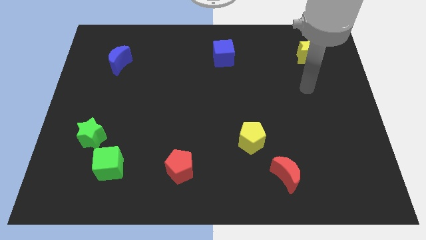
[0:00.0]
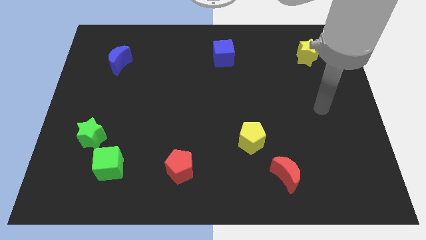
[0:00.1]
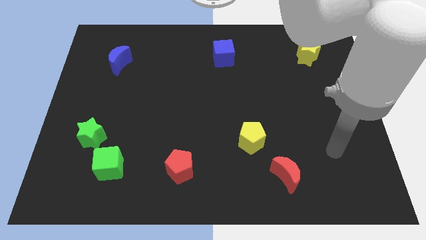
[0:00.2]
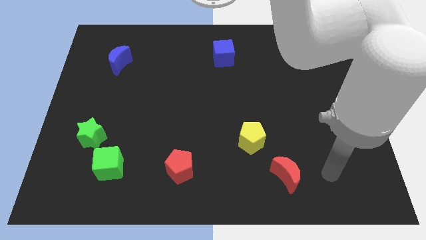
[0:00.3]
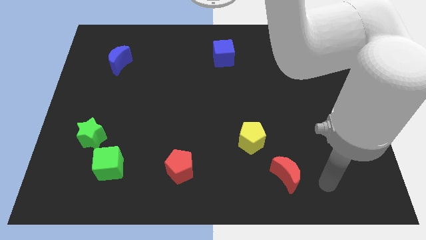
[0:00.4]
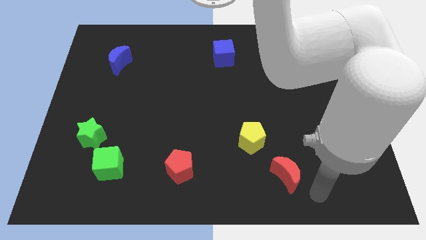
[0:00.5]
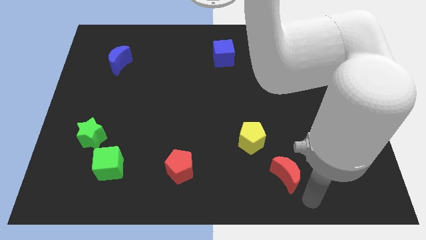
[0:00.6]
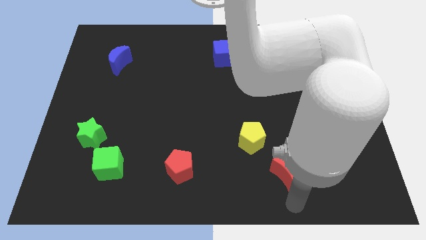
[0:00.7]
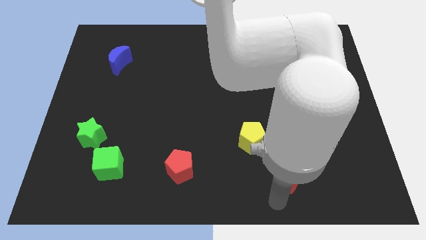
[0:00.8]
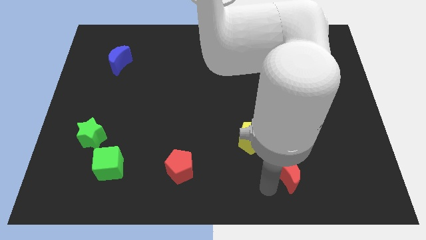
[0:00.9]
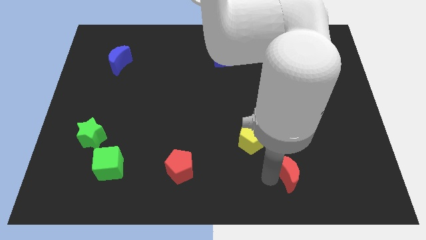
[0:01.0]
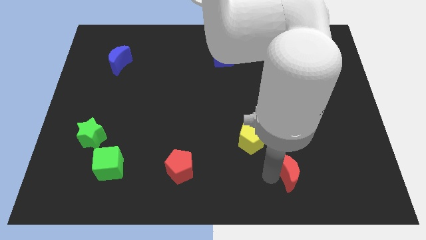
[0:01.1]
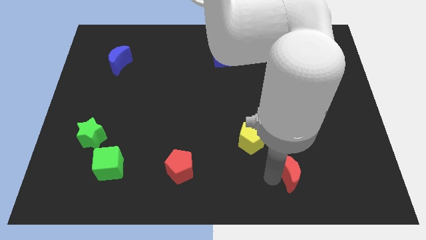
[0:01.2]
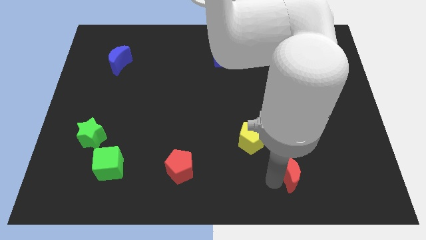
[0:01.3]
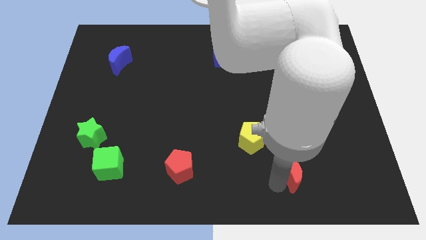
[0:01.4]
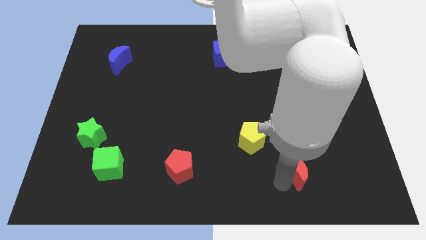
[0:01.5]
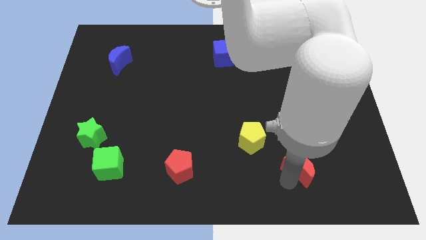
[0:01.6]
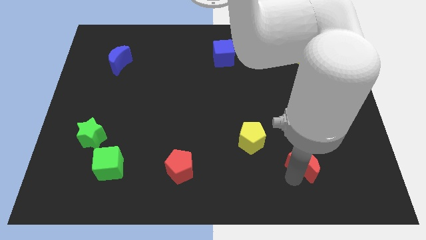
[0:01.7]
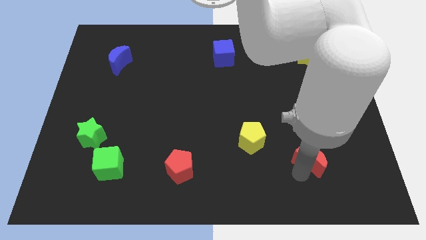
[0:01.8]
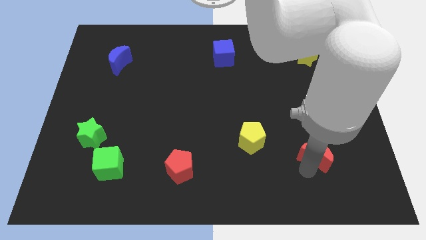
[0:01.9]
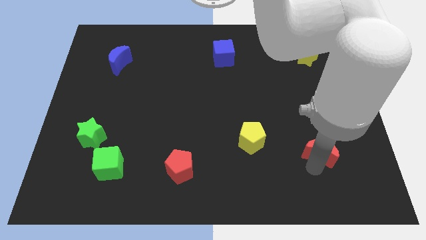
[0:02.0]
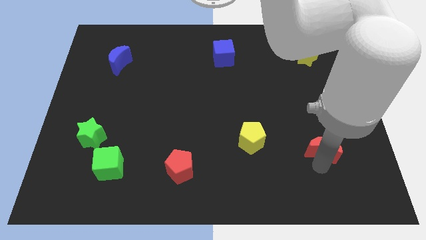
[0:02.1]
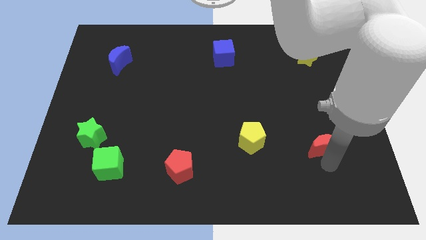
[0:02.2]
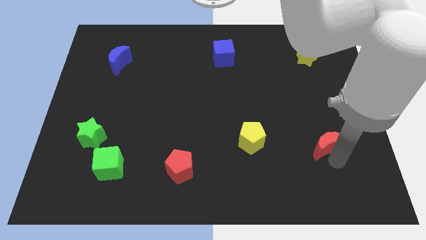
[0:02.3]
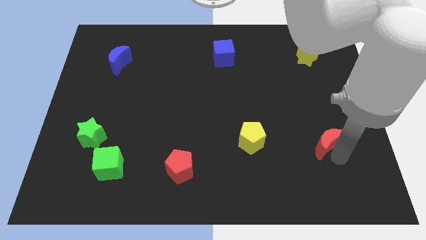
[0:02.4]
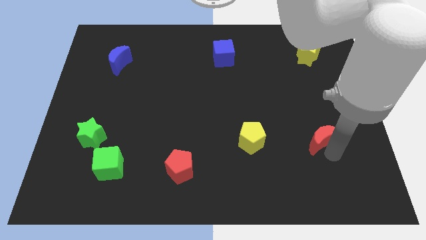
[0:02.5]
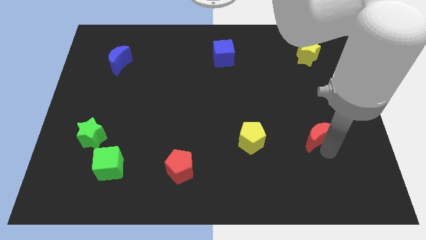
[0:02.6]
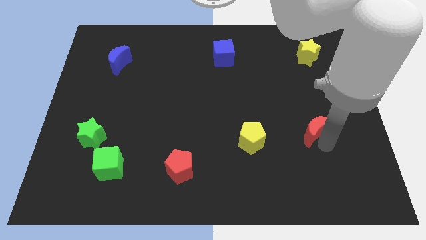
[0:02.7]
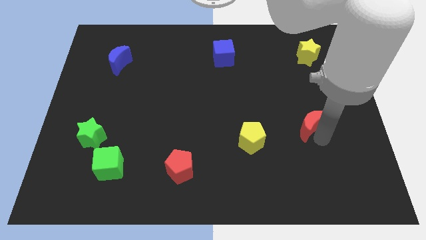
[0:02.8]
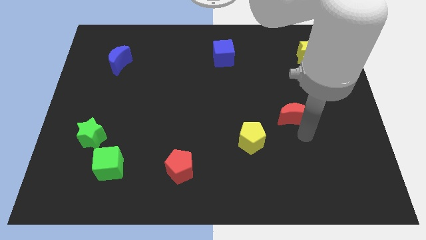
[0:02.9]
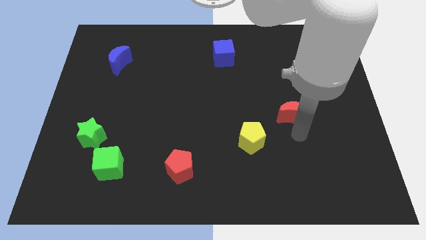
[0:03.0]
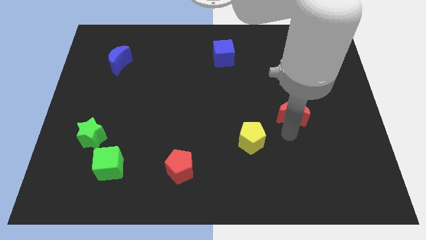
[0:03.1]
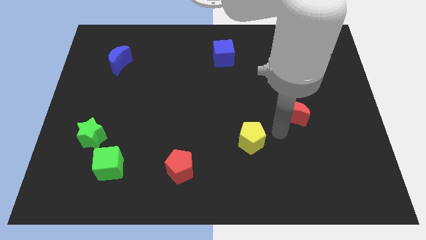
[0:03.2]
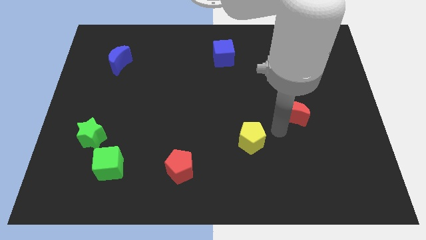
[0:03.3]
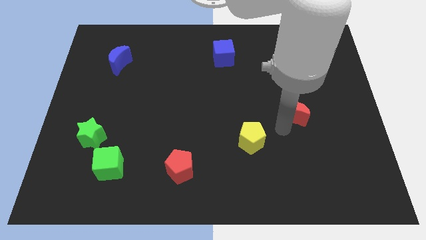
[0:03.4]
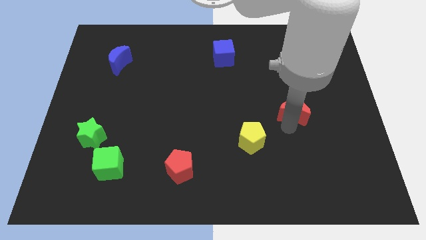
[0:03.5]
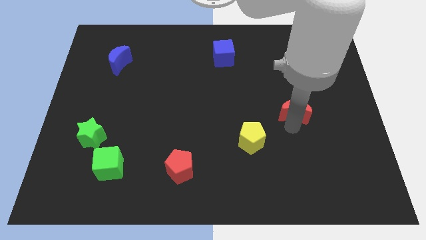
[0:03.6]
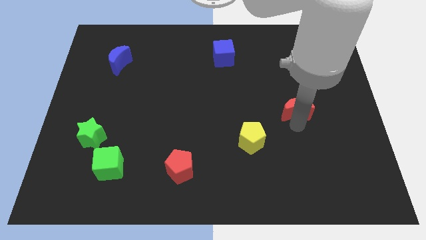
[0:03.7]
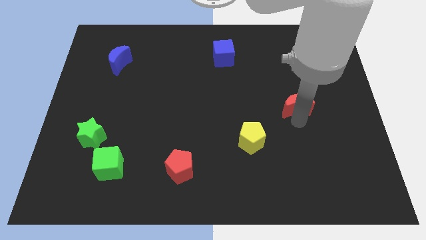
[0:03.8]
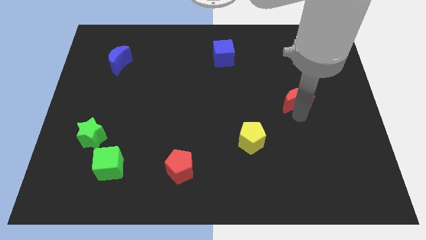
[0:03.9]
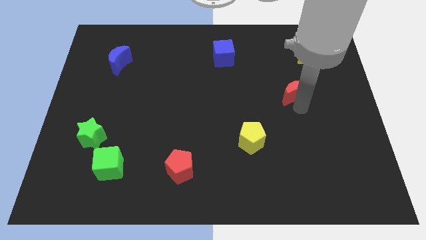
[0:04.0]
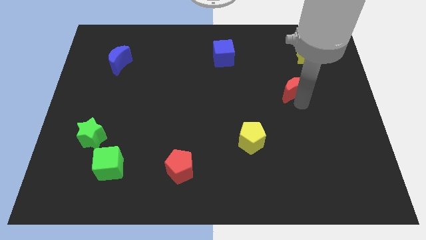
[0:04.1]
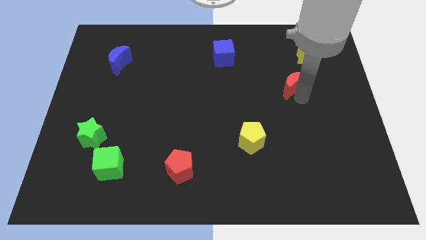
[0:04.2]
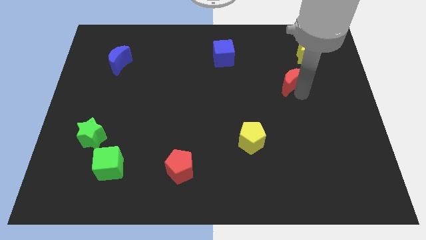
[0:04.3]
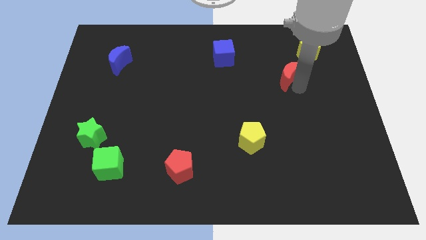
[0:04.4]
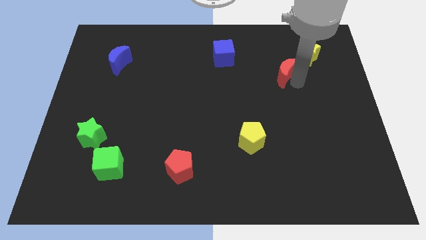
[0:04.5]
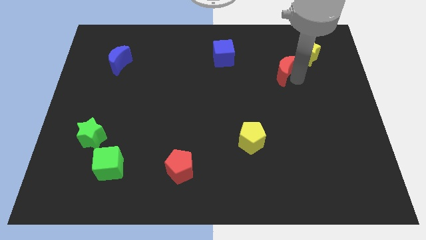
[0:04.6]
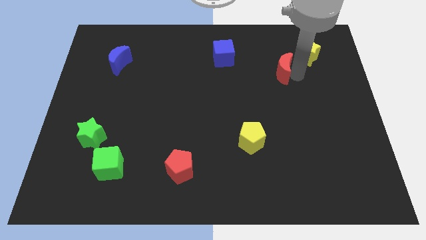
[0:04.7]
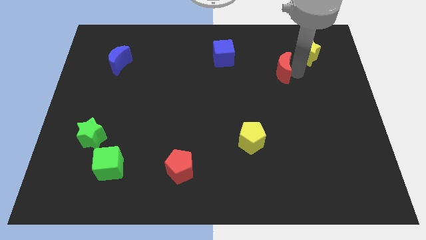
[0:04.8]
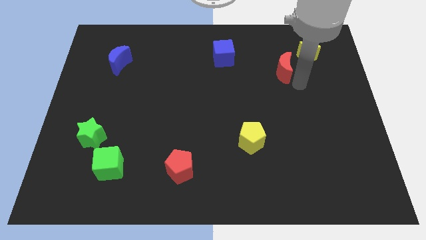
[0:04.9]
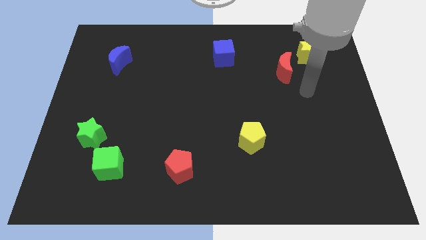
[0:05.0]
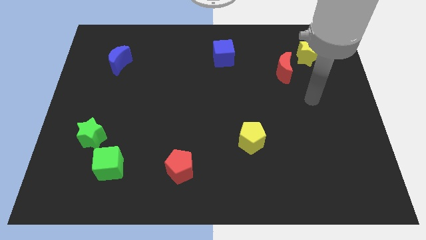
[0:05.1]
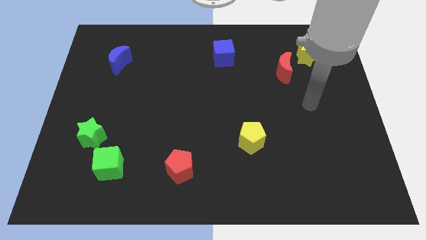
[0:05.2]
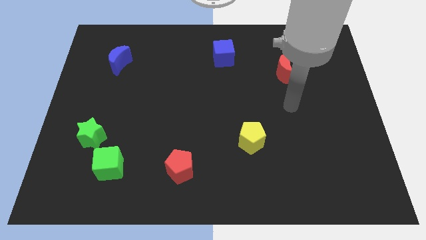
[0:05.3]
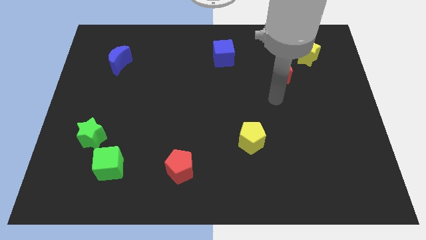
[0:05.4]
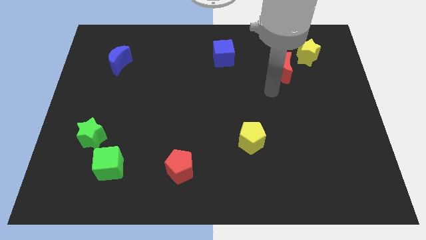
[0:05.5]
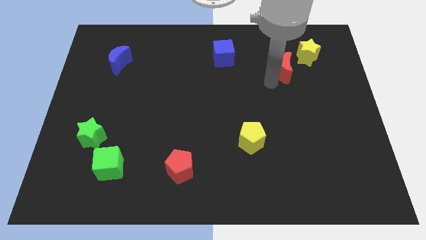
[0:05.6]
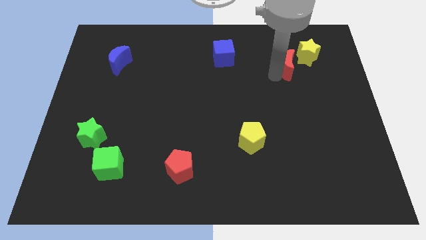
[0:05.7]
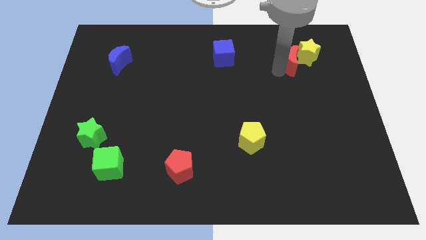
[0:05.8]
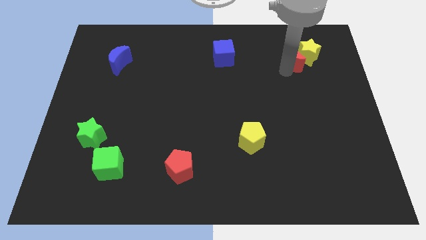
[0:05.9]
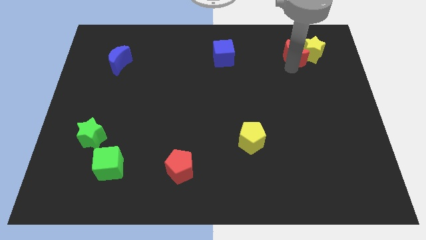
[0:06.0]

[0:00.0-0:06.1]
push the red moon next to the yellow star

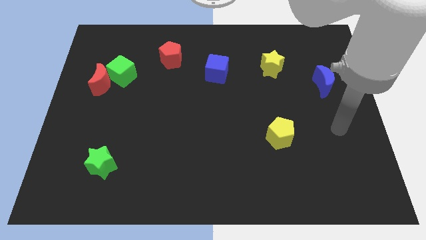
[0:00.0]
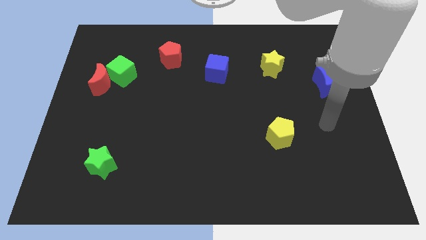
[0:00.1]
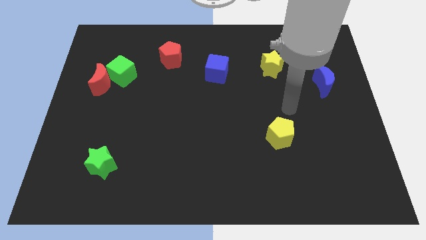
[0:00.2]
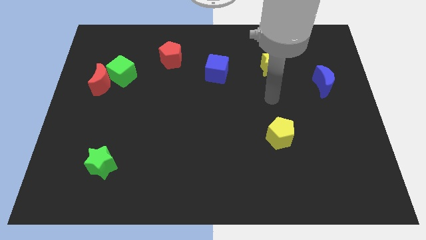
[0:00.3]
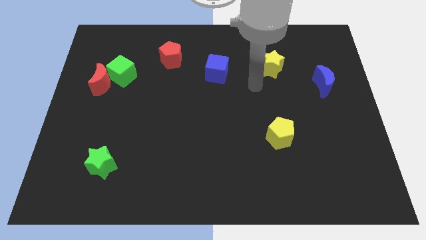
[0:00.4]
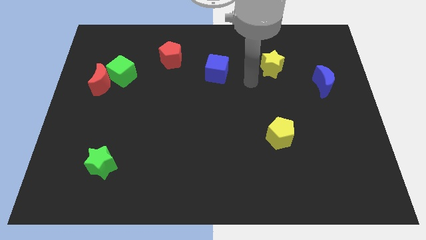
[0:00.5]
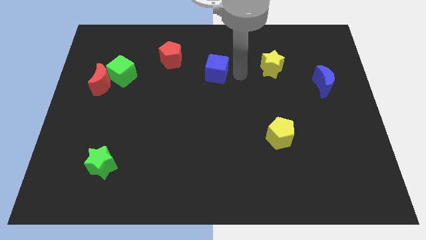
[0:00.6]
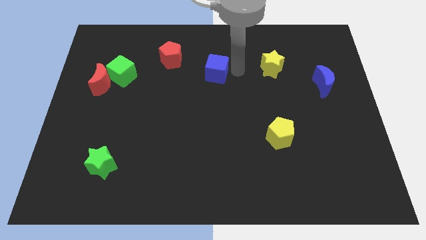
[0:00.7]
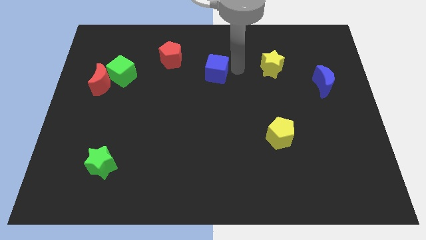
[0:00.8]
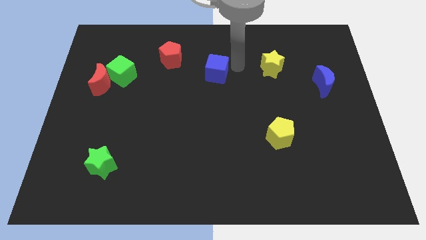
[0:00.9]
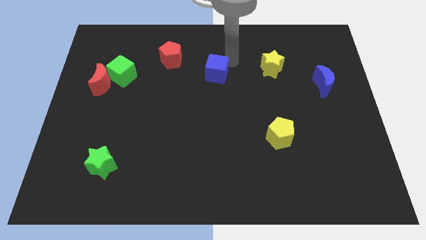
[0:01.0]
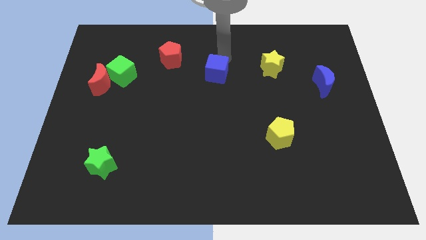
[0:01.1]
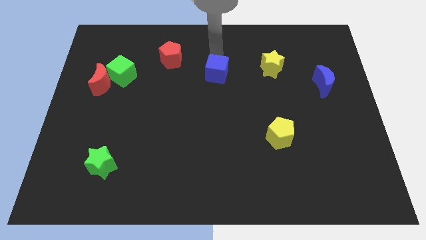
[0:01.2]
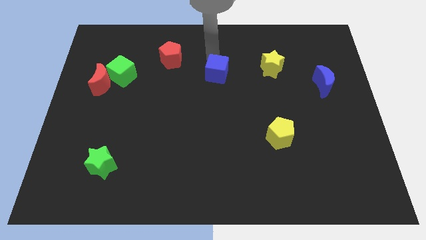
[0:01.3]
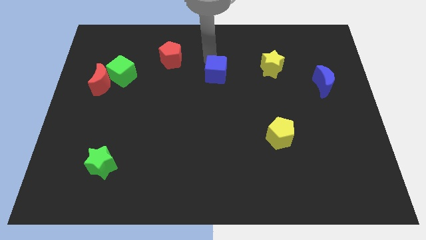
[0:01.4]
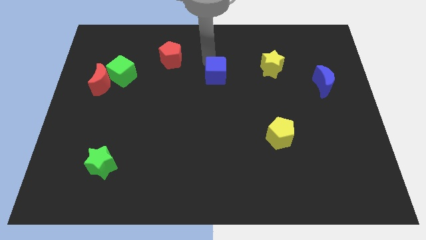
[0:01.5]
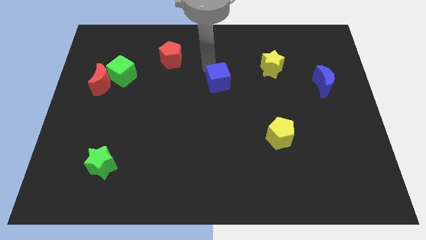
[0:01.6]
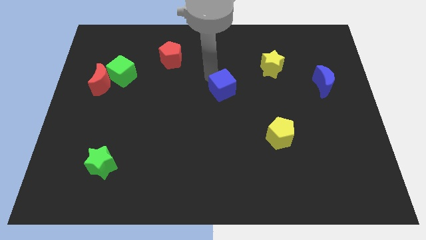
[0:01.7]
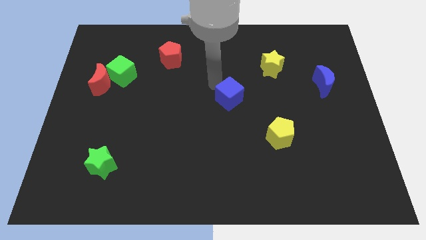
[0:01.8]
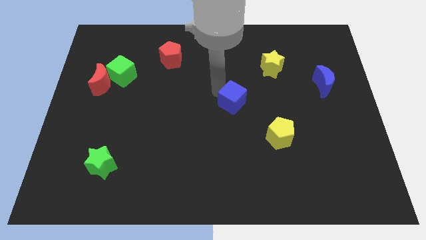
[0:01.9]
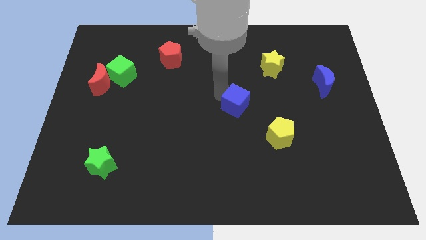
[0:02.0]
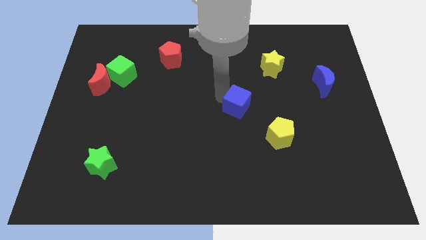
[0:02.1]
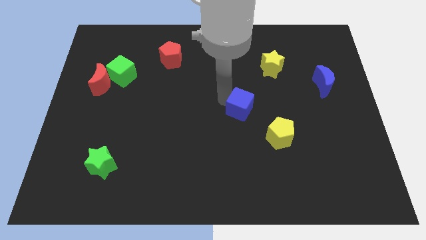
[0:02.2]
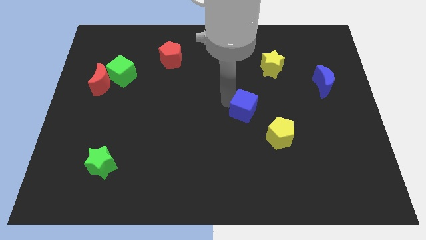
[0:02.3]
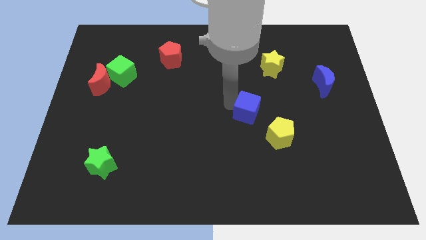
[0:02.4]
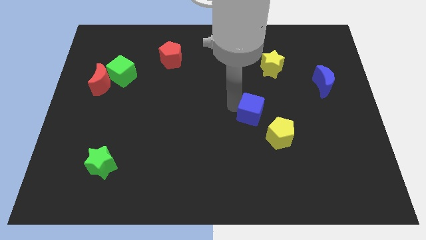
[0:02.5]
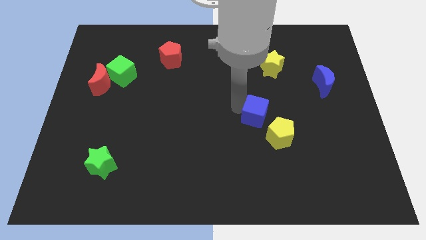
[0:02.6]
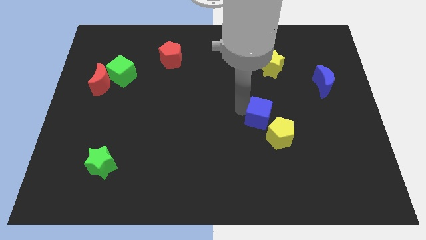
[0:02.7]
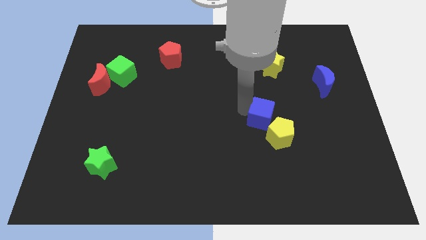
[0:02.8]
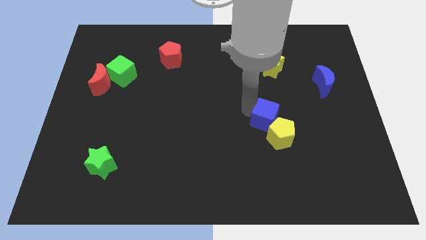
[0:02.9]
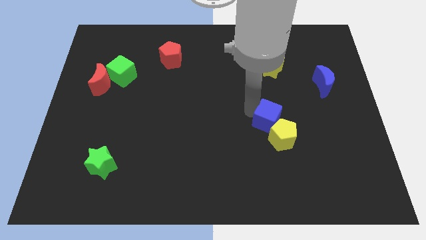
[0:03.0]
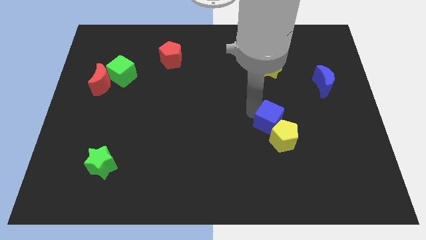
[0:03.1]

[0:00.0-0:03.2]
slide the blue cube to the yellow pentagon
